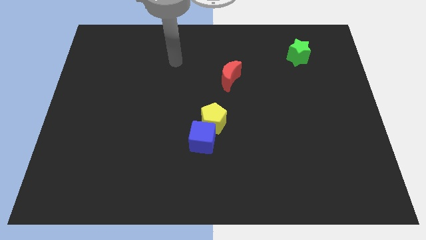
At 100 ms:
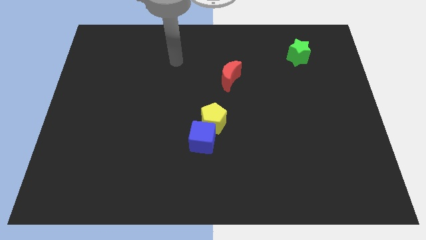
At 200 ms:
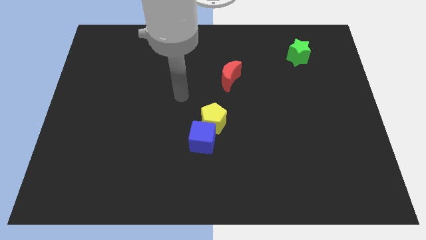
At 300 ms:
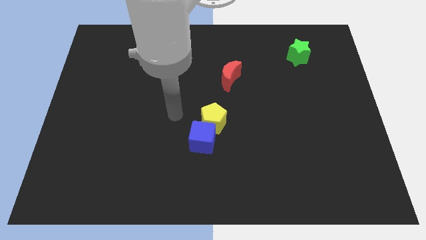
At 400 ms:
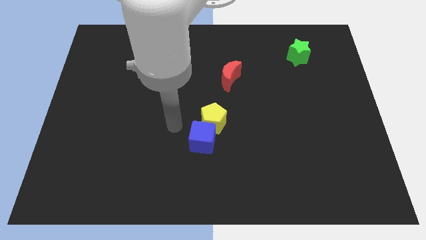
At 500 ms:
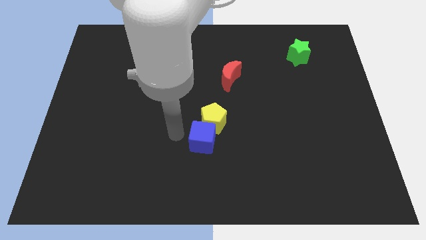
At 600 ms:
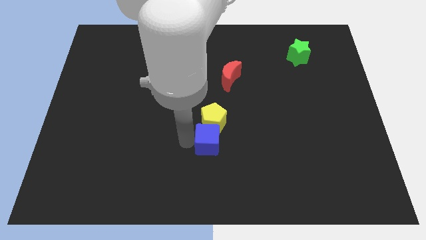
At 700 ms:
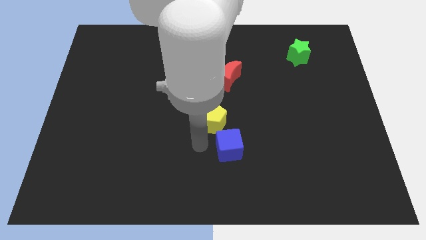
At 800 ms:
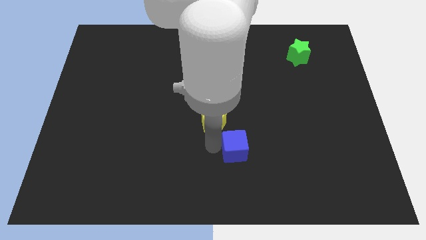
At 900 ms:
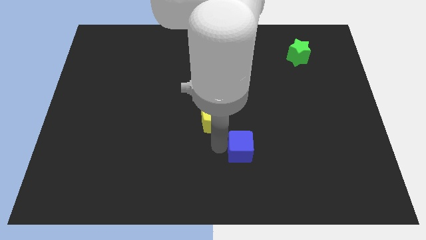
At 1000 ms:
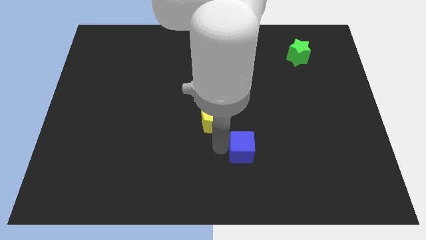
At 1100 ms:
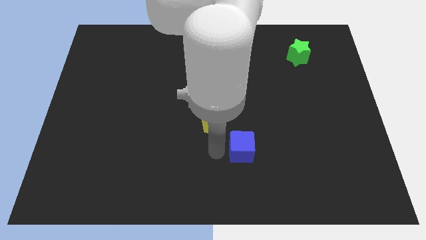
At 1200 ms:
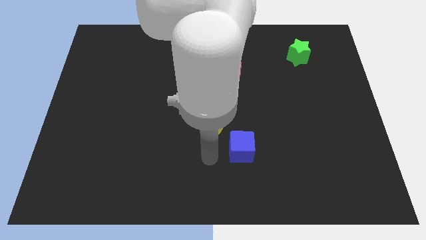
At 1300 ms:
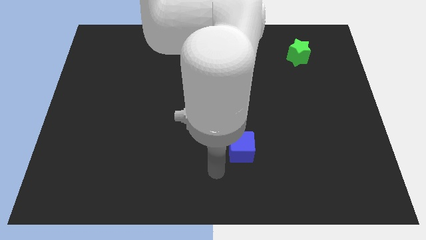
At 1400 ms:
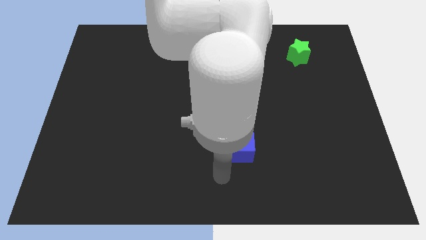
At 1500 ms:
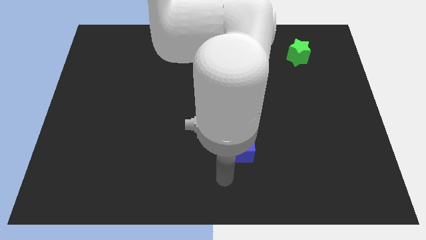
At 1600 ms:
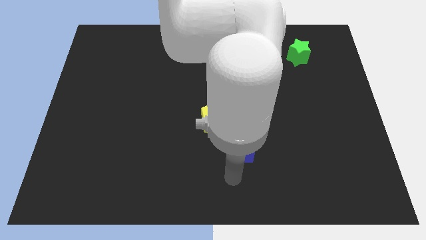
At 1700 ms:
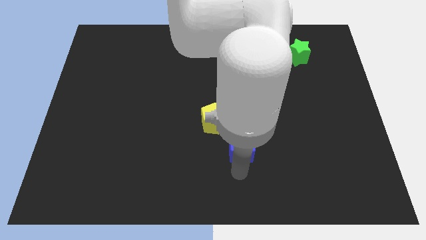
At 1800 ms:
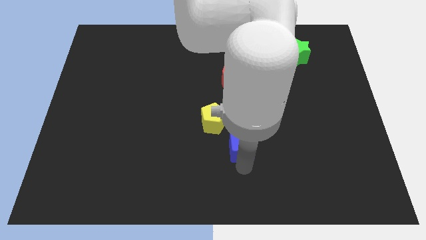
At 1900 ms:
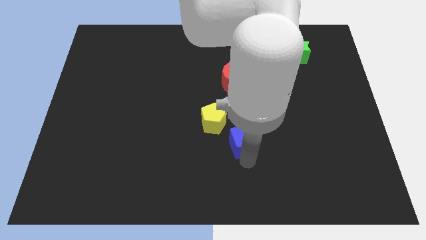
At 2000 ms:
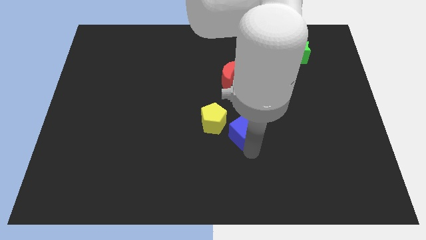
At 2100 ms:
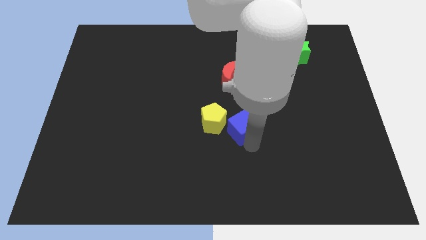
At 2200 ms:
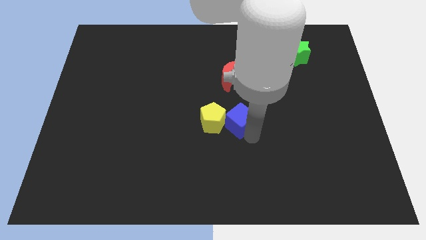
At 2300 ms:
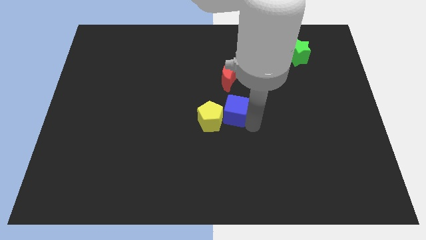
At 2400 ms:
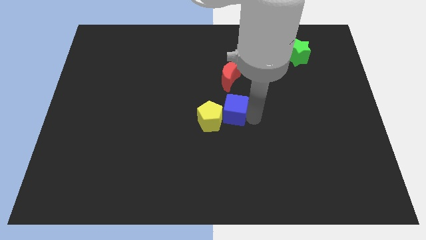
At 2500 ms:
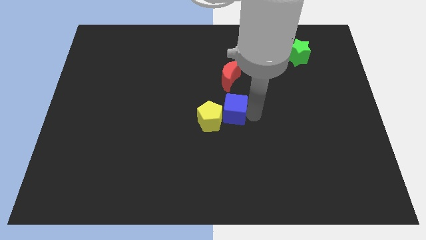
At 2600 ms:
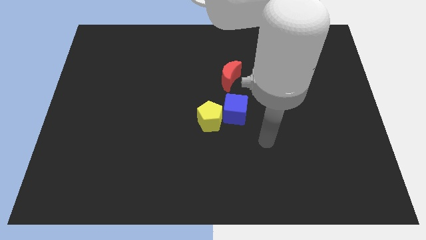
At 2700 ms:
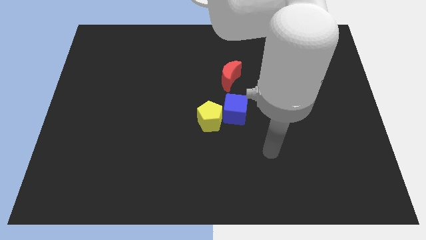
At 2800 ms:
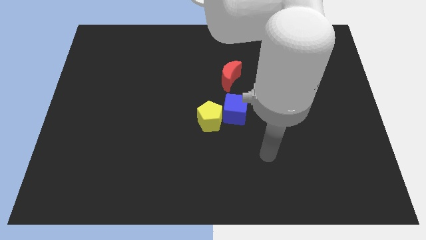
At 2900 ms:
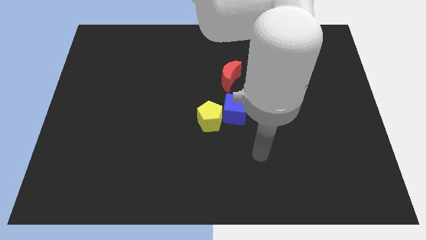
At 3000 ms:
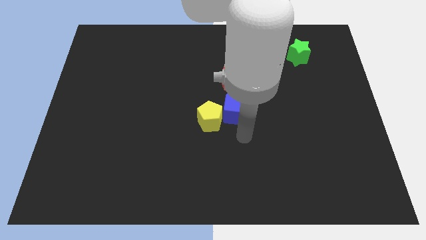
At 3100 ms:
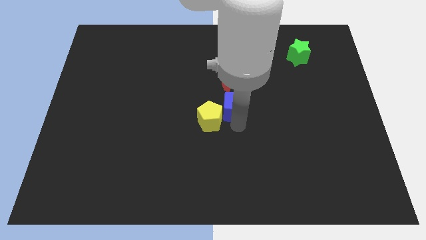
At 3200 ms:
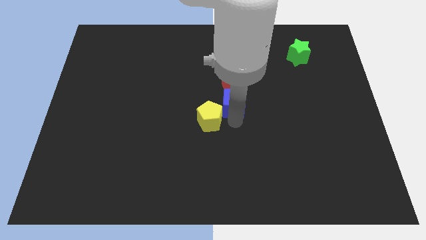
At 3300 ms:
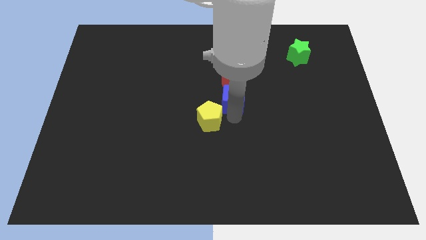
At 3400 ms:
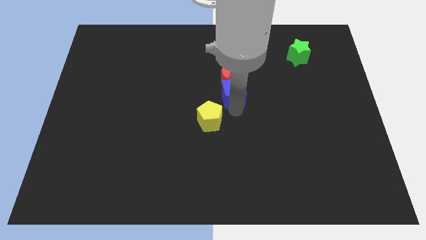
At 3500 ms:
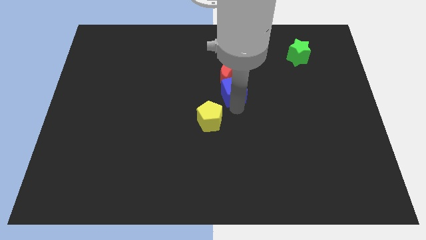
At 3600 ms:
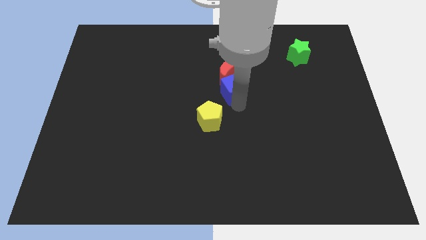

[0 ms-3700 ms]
put the cube to the red moon

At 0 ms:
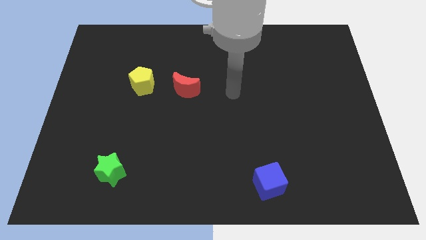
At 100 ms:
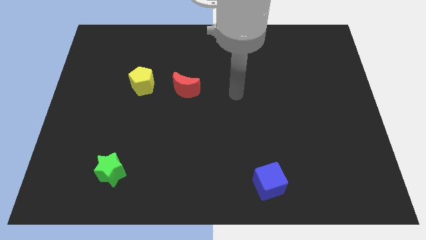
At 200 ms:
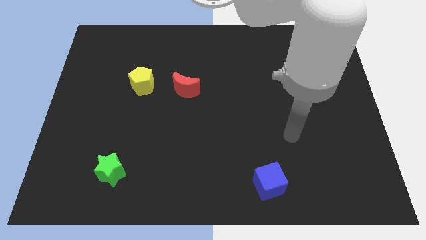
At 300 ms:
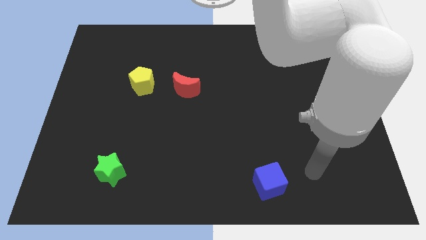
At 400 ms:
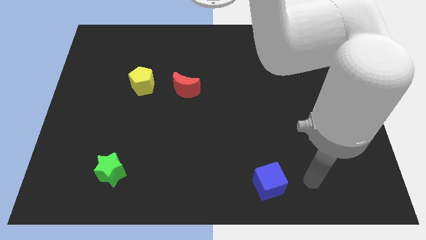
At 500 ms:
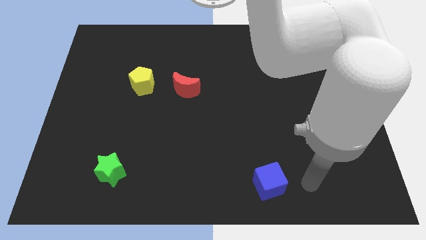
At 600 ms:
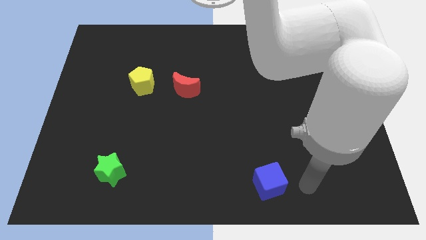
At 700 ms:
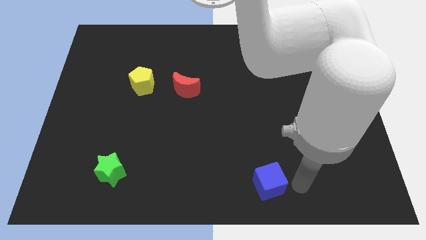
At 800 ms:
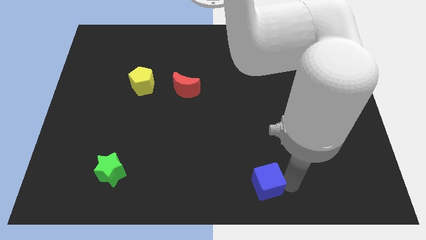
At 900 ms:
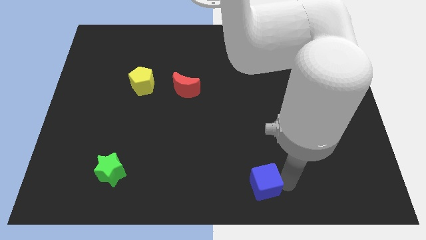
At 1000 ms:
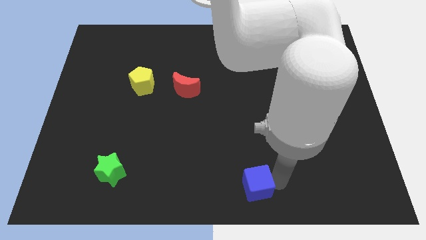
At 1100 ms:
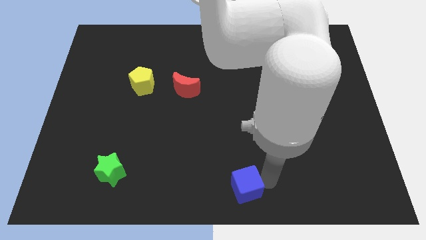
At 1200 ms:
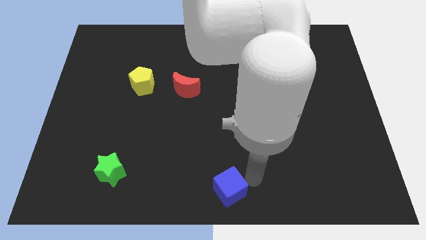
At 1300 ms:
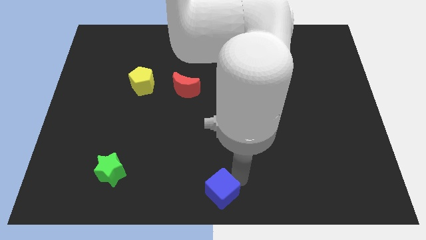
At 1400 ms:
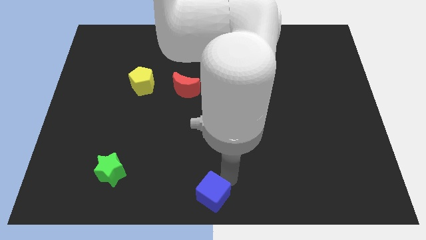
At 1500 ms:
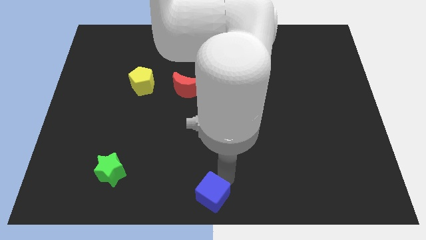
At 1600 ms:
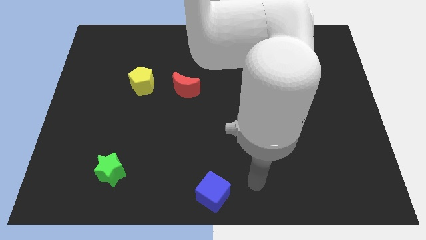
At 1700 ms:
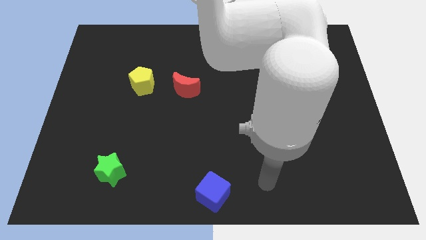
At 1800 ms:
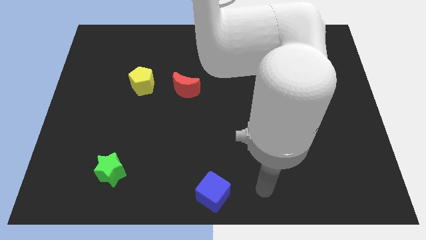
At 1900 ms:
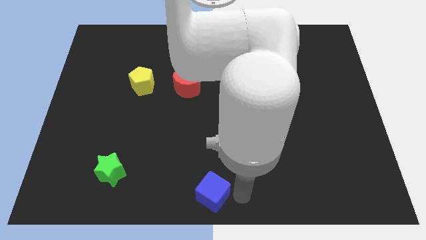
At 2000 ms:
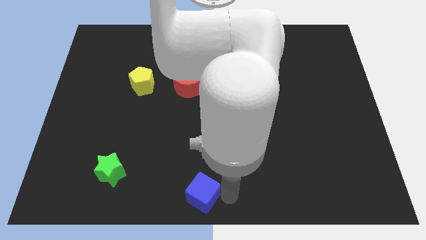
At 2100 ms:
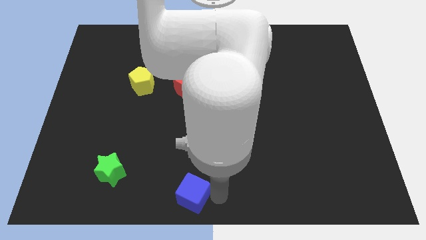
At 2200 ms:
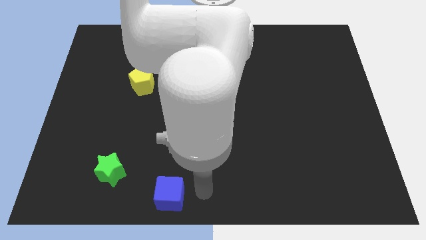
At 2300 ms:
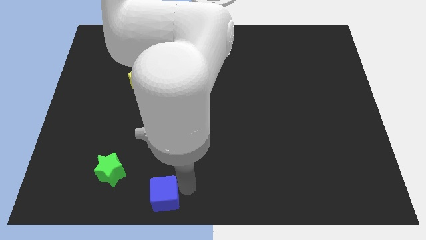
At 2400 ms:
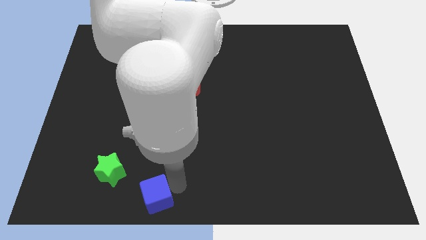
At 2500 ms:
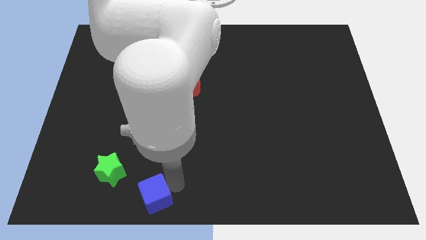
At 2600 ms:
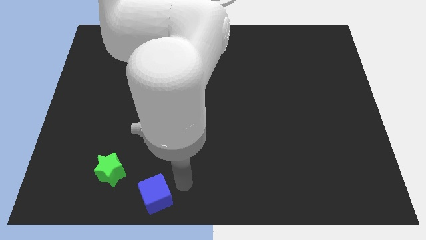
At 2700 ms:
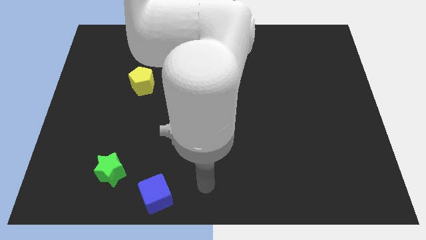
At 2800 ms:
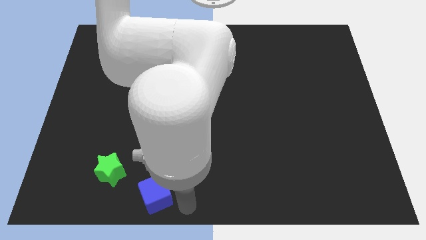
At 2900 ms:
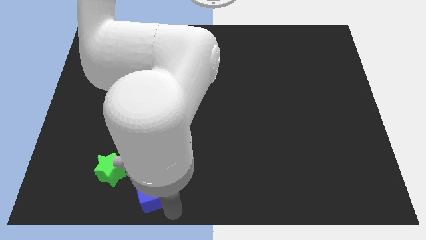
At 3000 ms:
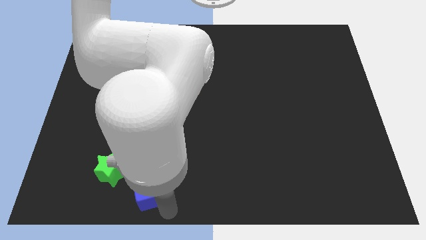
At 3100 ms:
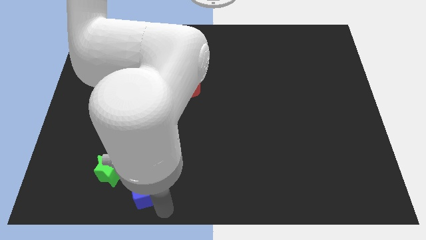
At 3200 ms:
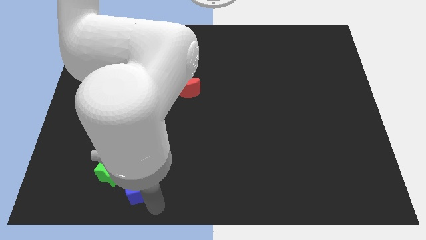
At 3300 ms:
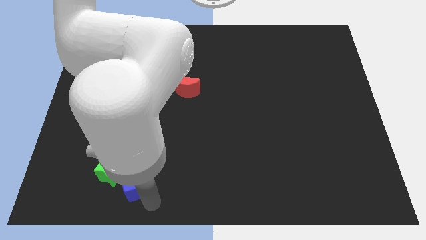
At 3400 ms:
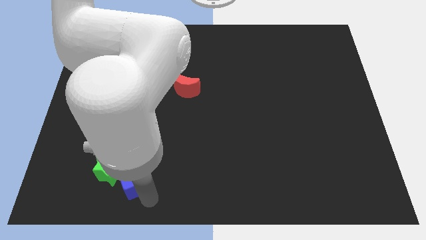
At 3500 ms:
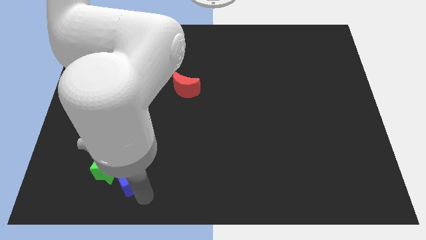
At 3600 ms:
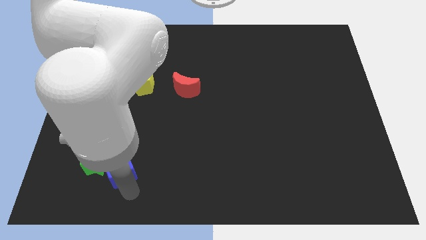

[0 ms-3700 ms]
push the blue block towards the green star

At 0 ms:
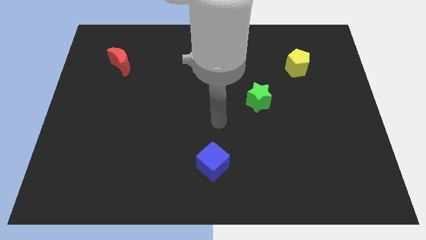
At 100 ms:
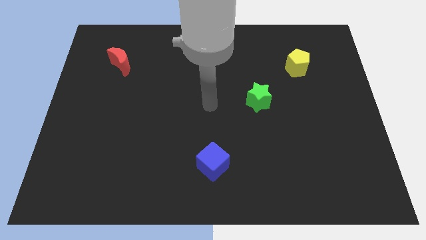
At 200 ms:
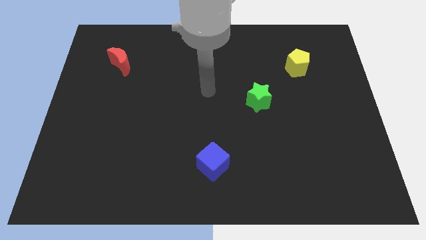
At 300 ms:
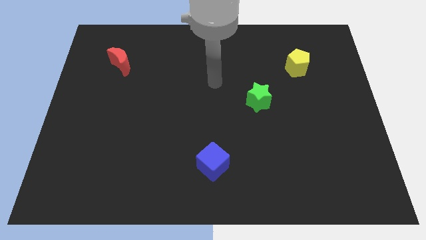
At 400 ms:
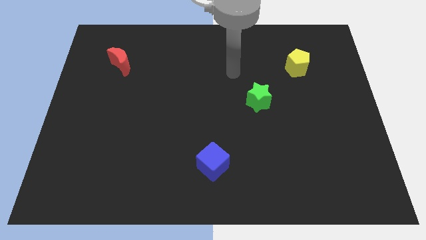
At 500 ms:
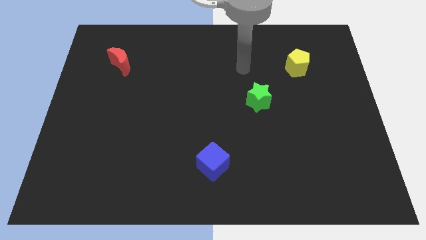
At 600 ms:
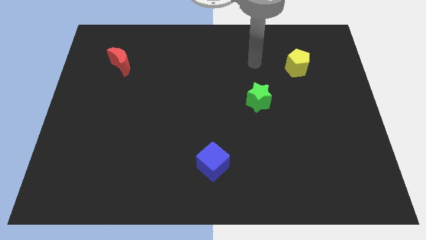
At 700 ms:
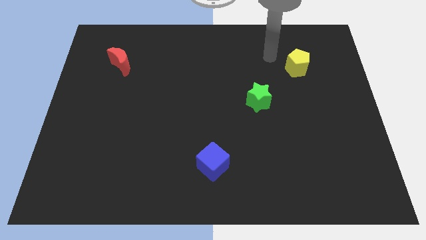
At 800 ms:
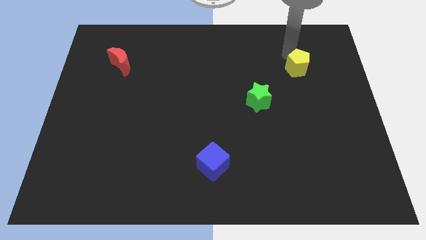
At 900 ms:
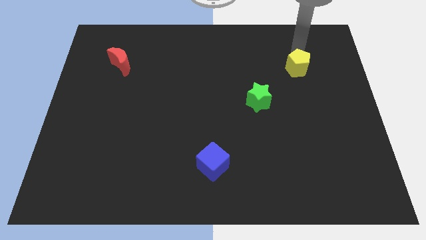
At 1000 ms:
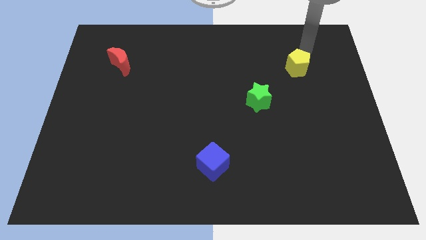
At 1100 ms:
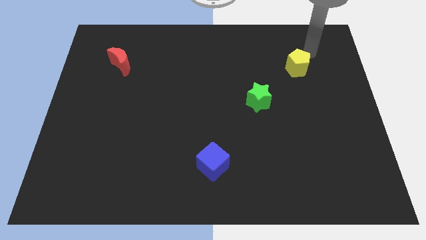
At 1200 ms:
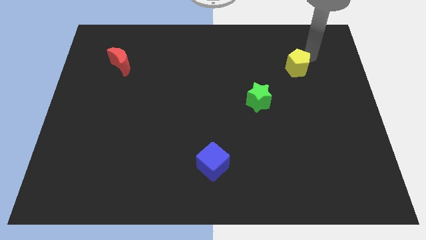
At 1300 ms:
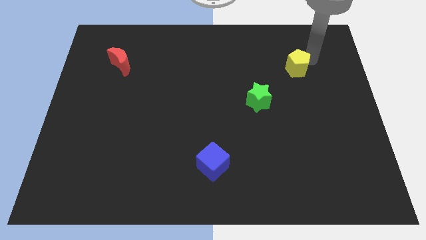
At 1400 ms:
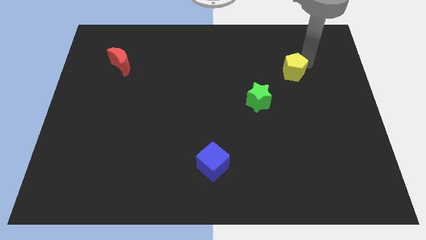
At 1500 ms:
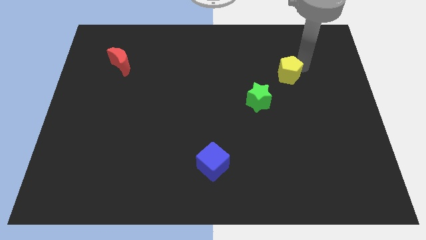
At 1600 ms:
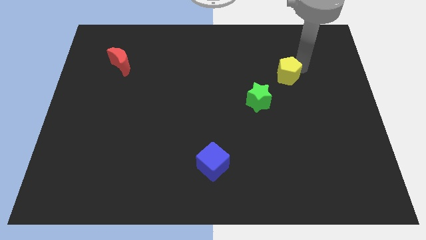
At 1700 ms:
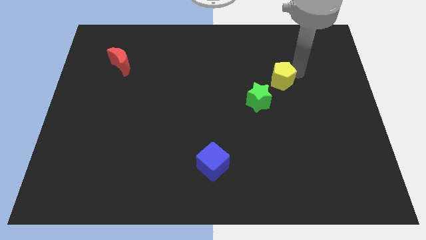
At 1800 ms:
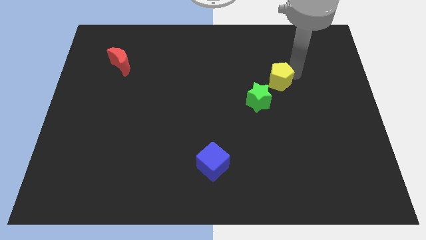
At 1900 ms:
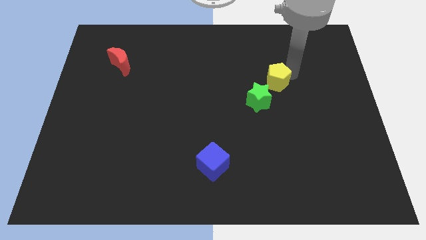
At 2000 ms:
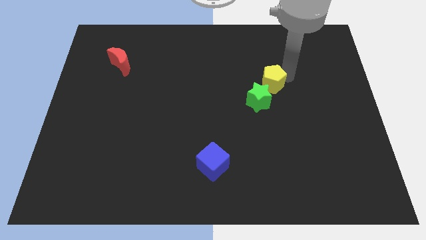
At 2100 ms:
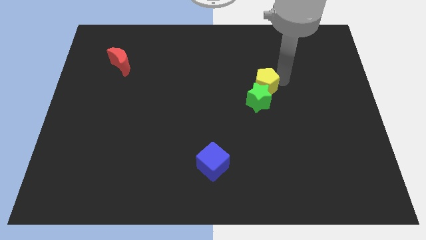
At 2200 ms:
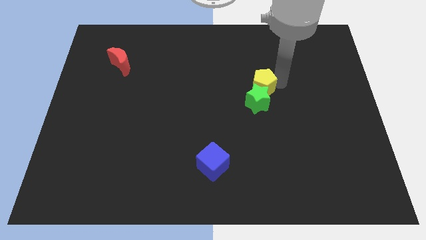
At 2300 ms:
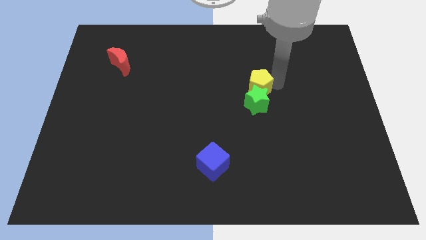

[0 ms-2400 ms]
slide the yellow pentagon towards the green block
